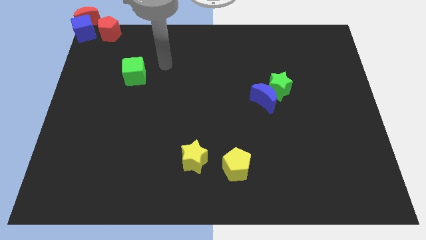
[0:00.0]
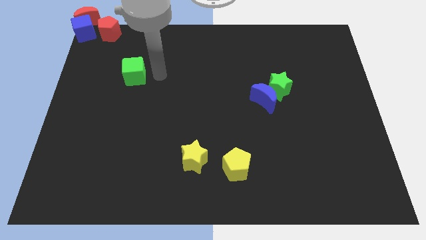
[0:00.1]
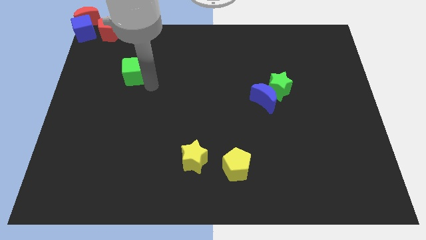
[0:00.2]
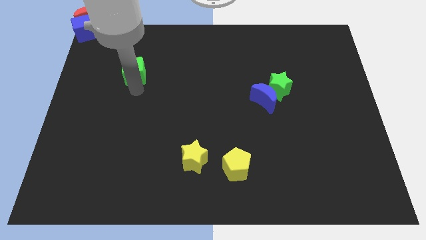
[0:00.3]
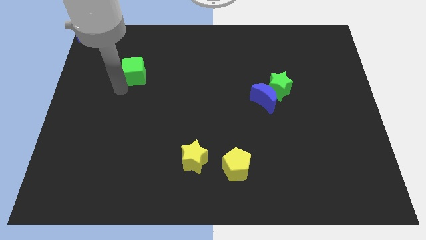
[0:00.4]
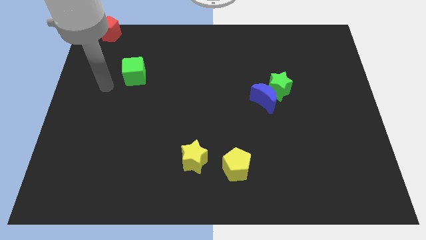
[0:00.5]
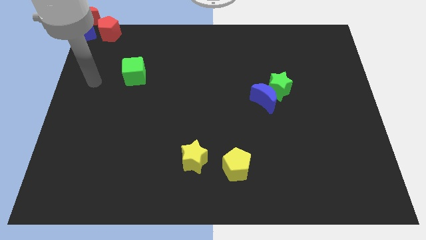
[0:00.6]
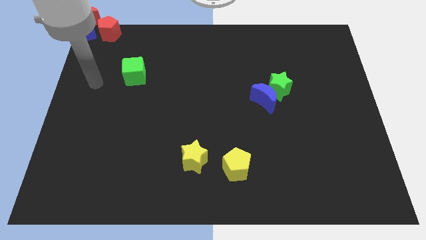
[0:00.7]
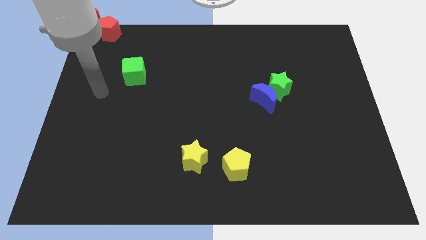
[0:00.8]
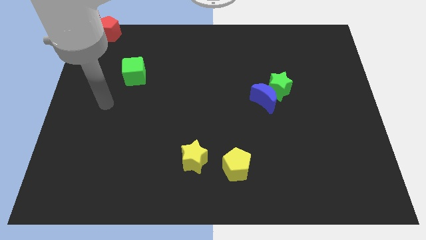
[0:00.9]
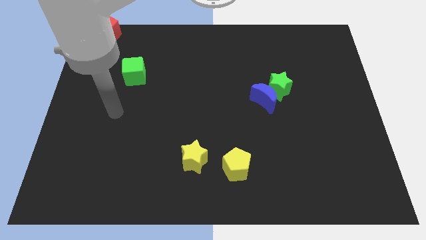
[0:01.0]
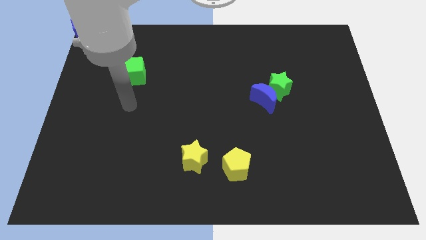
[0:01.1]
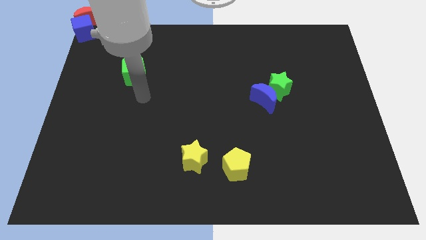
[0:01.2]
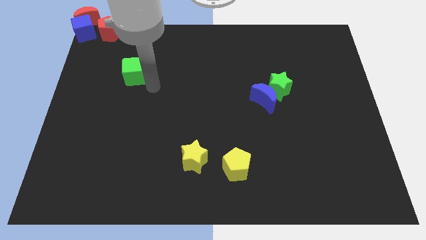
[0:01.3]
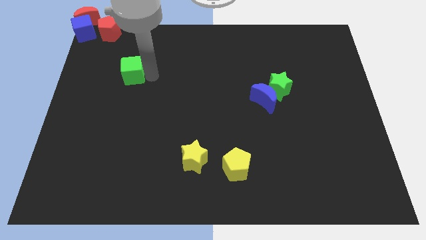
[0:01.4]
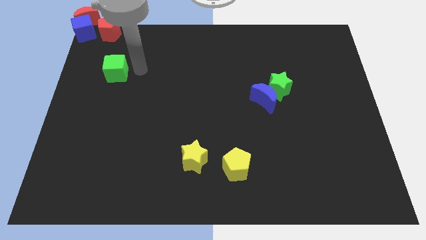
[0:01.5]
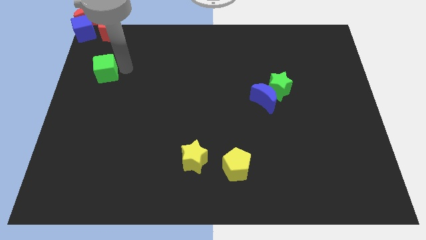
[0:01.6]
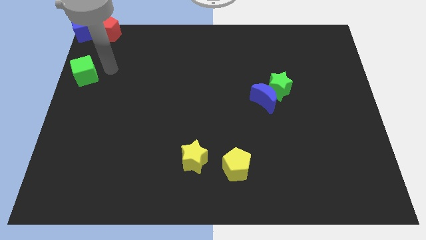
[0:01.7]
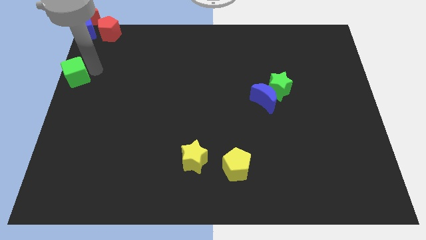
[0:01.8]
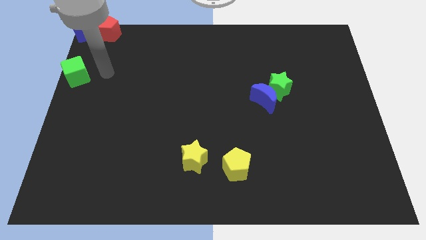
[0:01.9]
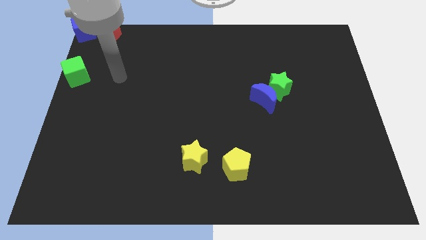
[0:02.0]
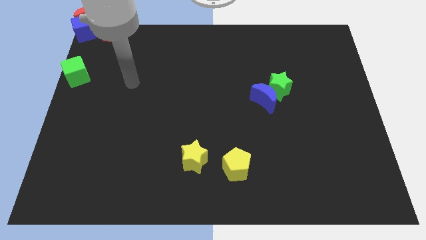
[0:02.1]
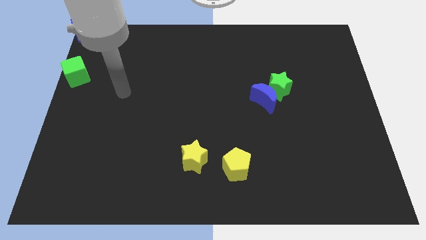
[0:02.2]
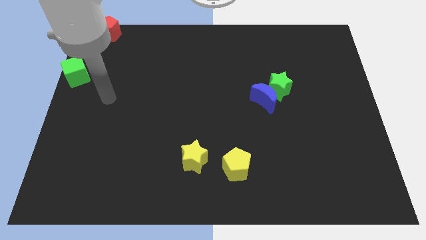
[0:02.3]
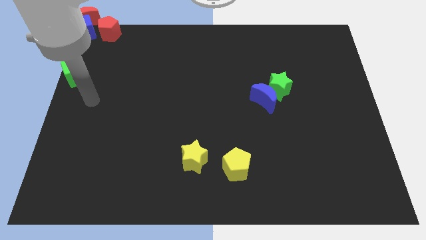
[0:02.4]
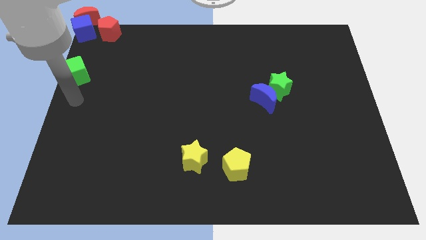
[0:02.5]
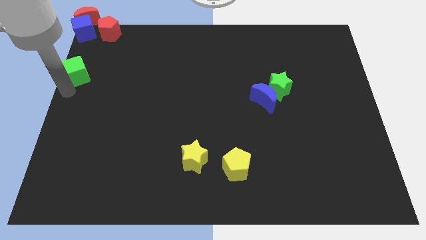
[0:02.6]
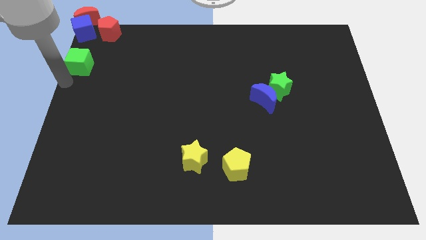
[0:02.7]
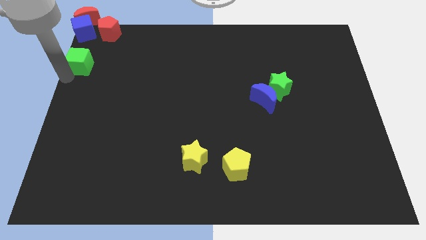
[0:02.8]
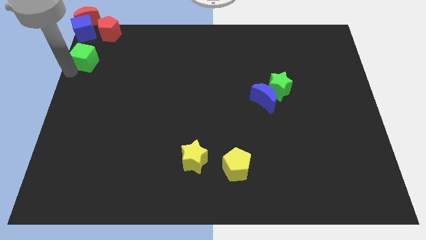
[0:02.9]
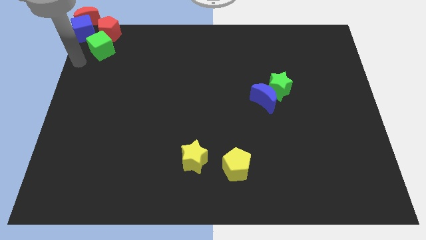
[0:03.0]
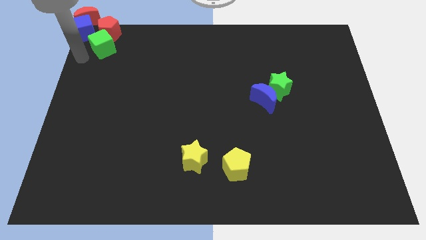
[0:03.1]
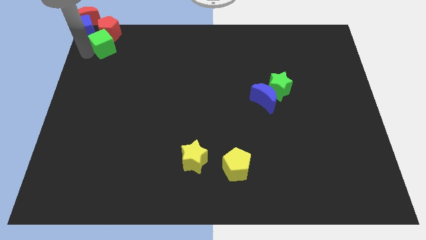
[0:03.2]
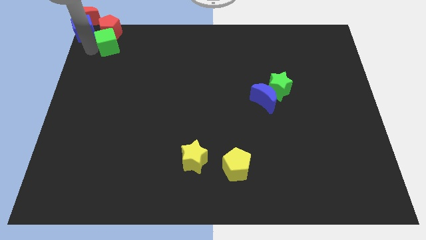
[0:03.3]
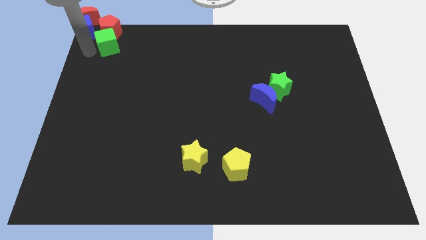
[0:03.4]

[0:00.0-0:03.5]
move the green cube into the bottom side of the red pentagon

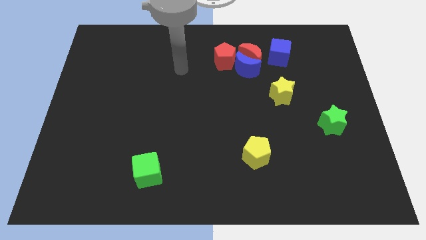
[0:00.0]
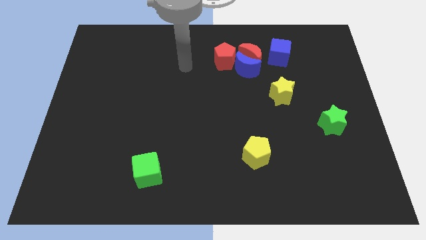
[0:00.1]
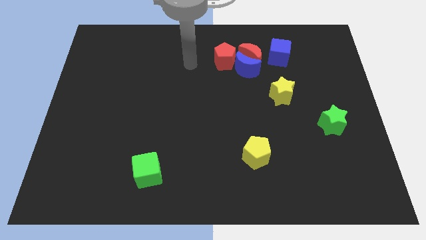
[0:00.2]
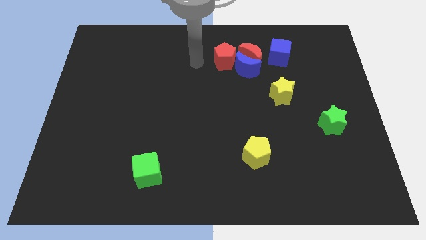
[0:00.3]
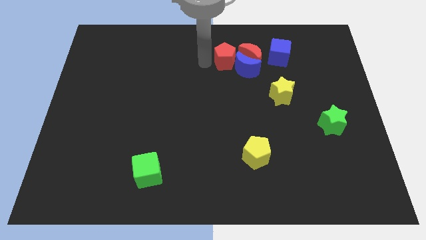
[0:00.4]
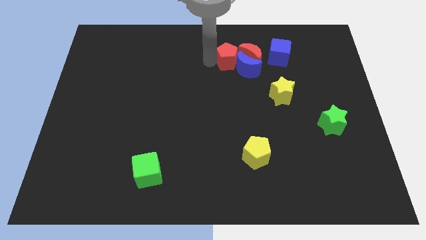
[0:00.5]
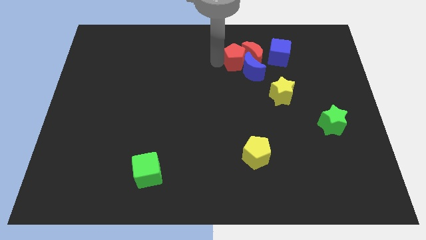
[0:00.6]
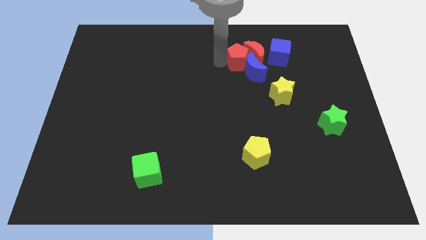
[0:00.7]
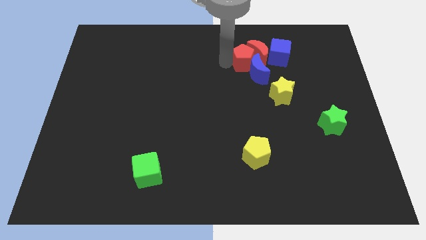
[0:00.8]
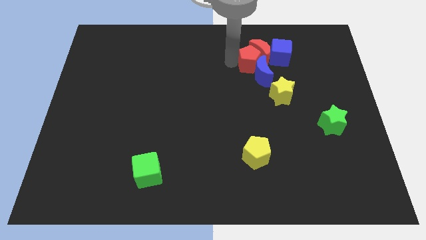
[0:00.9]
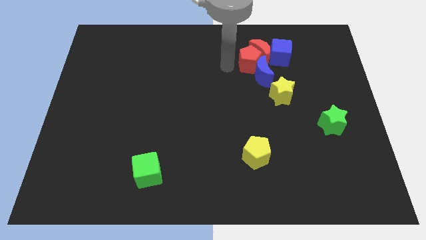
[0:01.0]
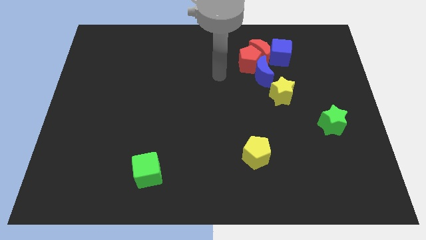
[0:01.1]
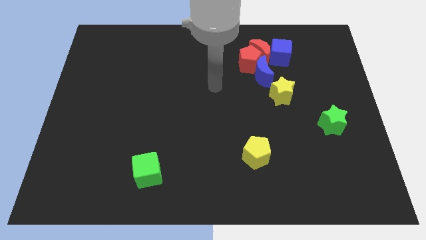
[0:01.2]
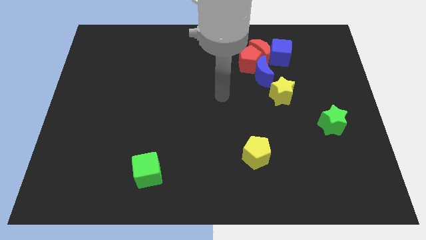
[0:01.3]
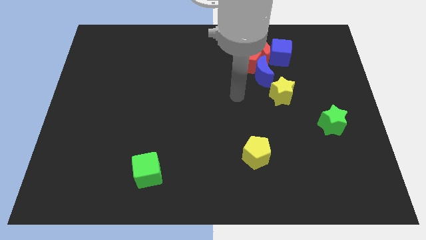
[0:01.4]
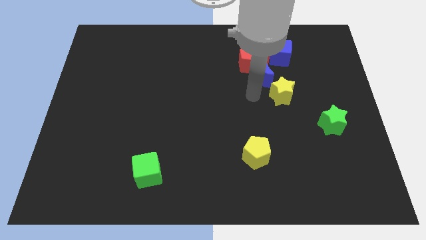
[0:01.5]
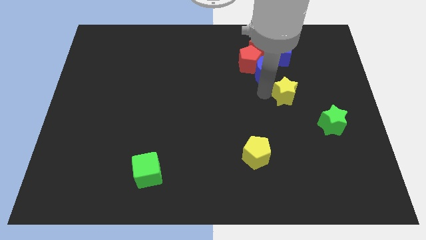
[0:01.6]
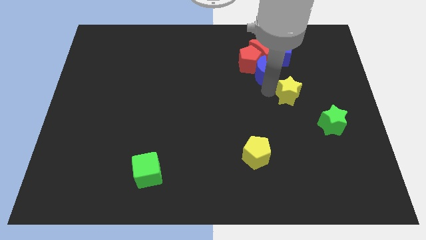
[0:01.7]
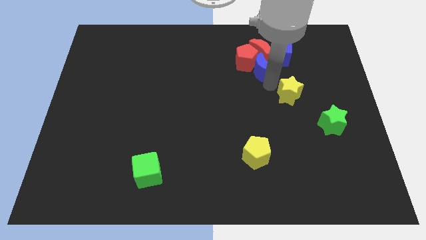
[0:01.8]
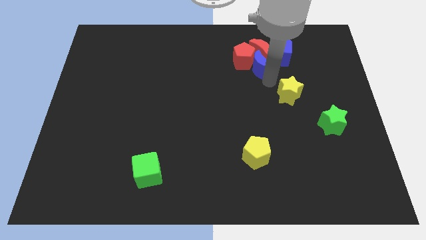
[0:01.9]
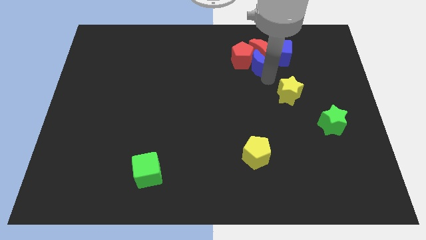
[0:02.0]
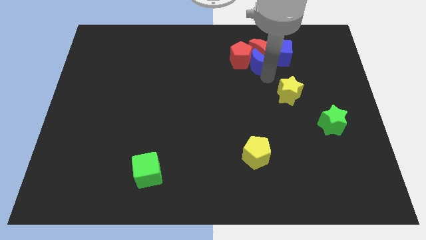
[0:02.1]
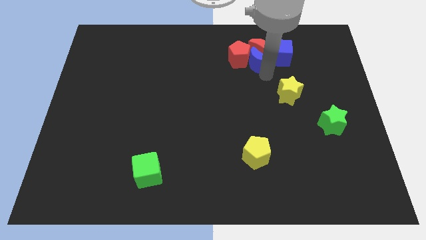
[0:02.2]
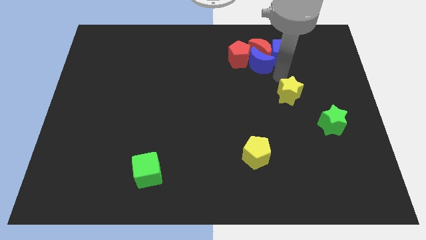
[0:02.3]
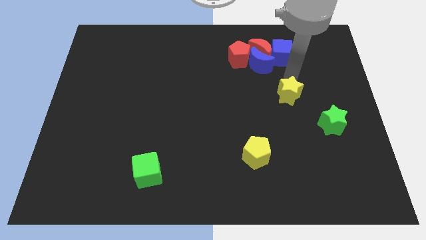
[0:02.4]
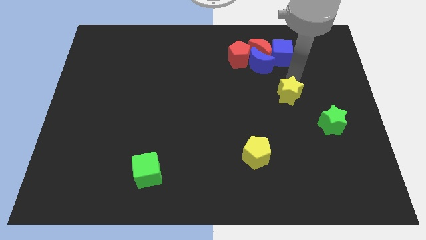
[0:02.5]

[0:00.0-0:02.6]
move the red pentagon into the blue crescent and red crescent

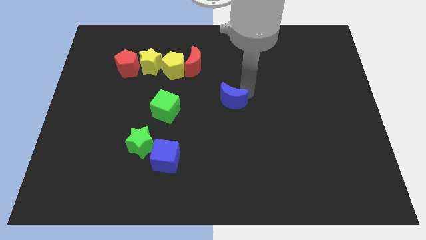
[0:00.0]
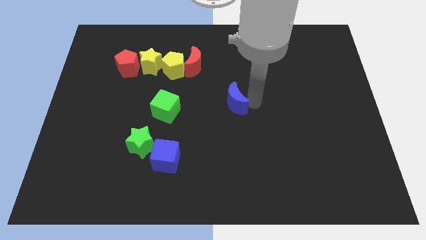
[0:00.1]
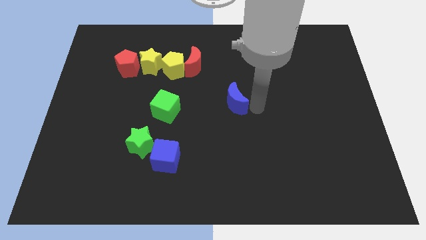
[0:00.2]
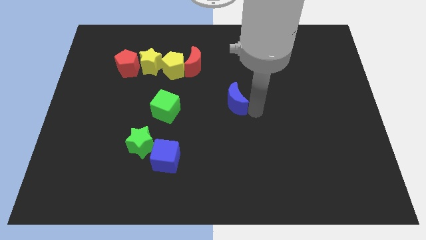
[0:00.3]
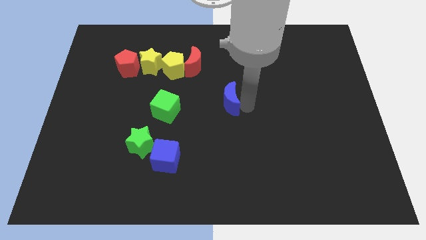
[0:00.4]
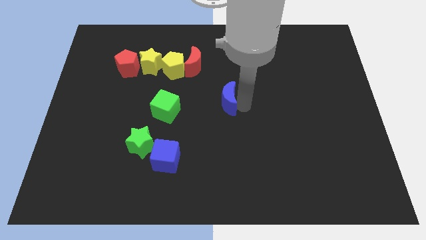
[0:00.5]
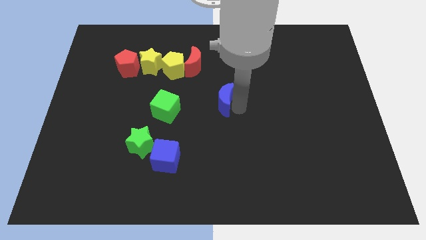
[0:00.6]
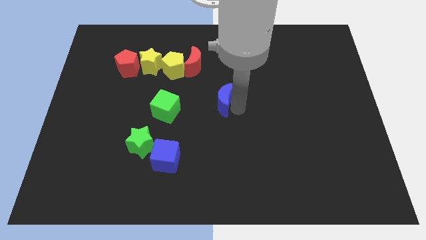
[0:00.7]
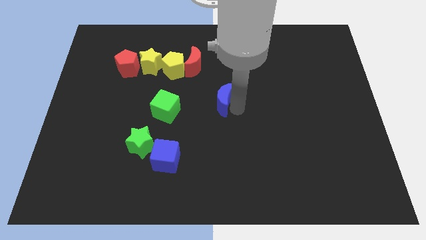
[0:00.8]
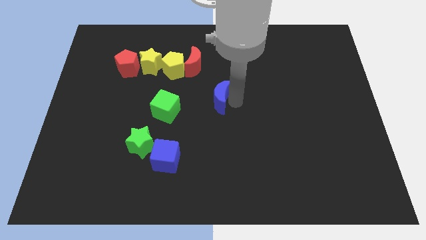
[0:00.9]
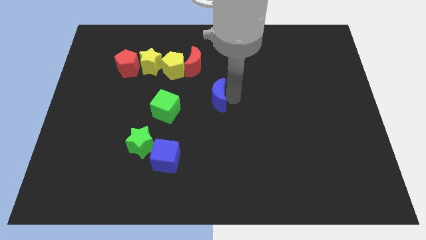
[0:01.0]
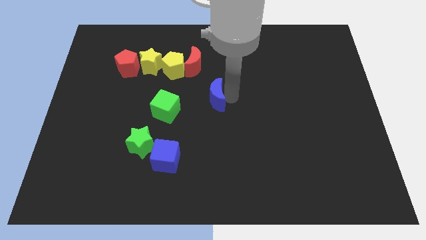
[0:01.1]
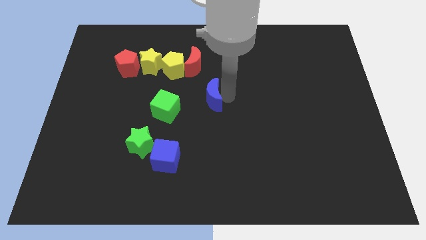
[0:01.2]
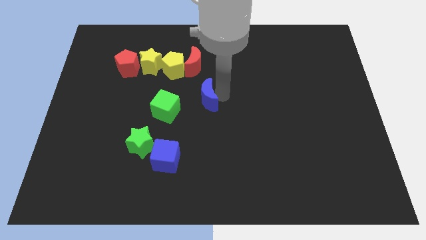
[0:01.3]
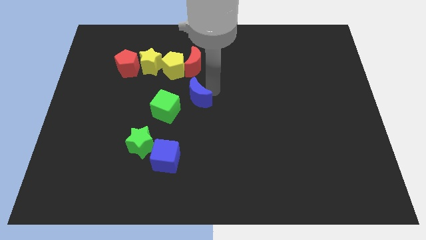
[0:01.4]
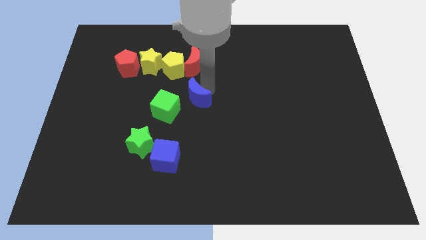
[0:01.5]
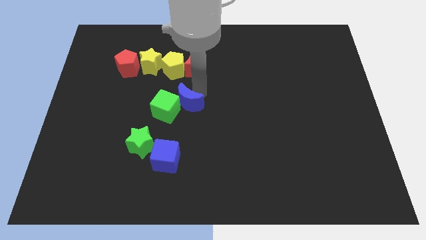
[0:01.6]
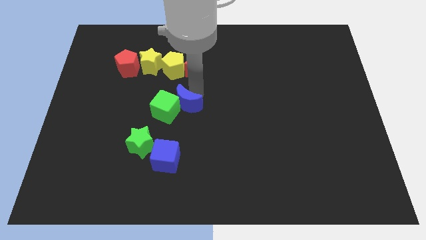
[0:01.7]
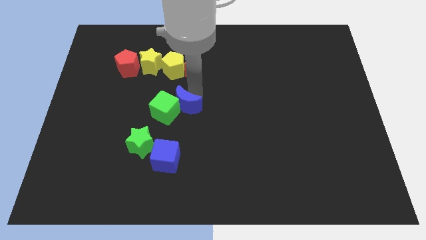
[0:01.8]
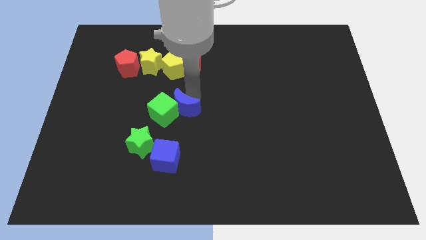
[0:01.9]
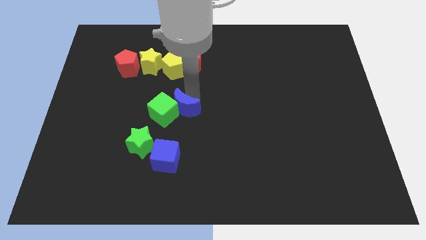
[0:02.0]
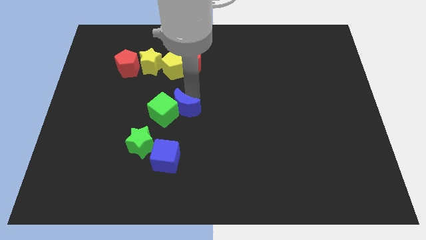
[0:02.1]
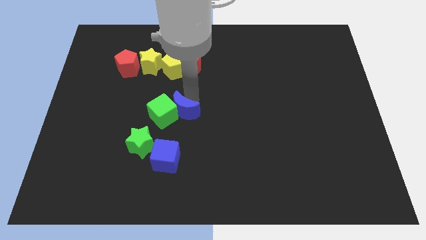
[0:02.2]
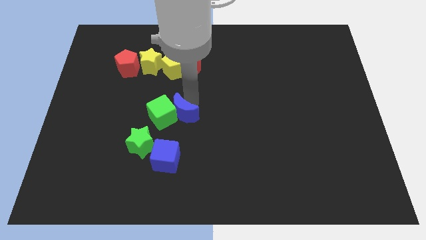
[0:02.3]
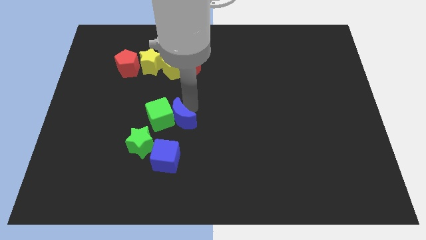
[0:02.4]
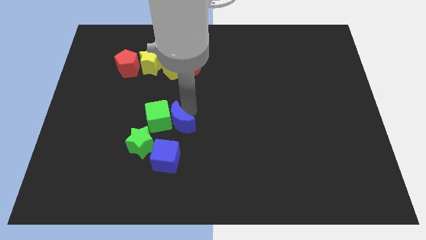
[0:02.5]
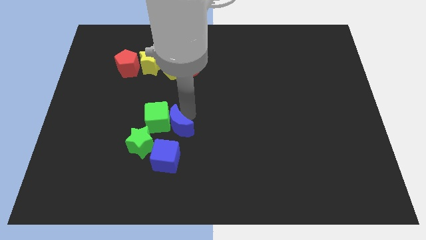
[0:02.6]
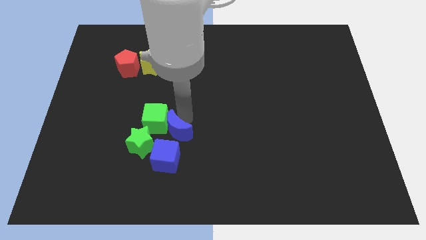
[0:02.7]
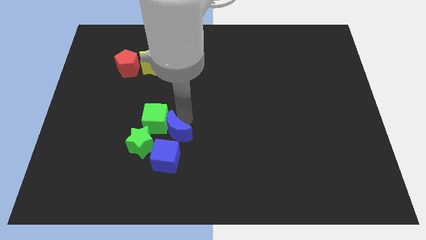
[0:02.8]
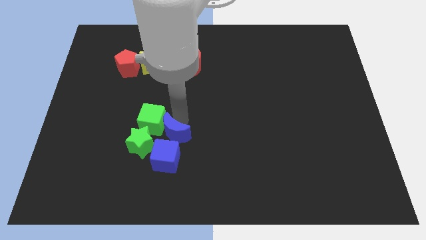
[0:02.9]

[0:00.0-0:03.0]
push the blue crescent into the right of the green cube
